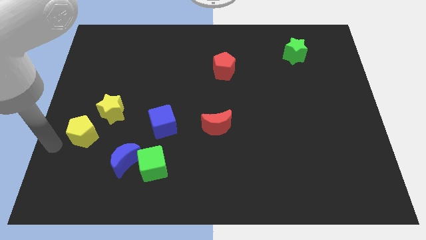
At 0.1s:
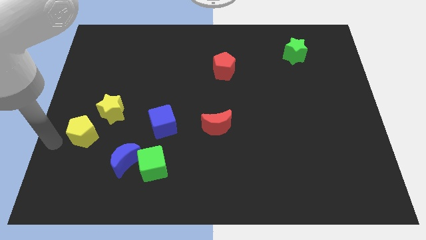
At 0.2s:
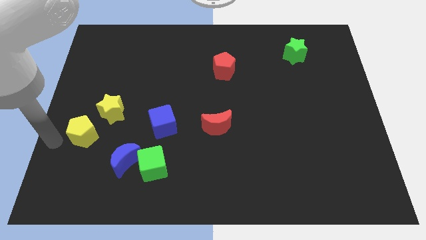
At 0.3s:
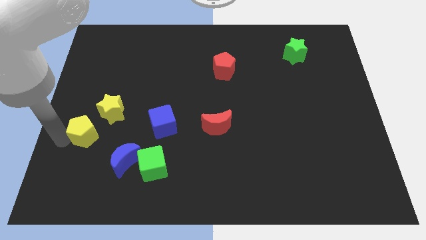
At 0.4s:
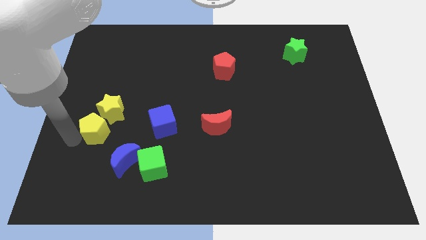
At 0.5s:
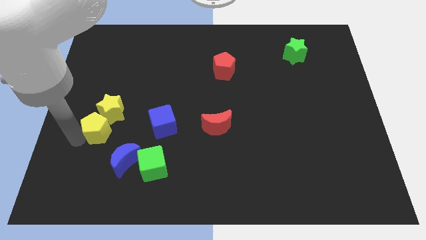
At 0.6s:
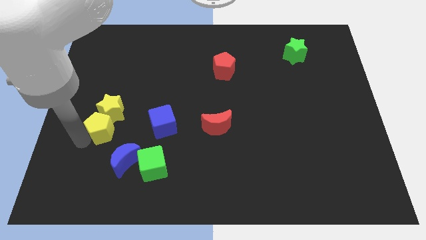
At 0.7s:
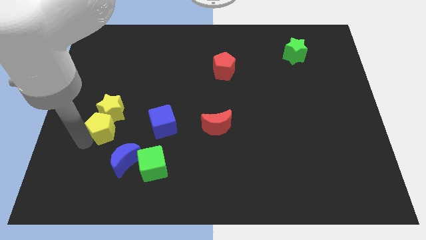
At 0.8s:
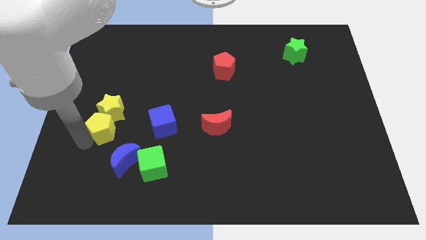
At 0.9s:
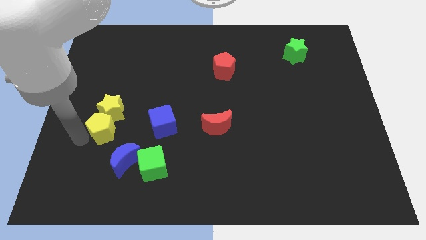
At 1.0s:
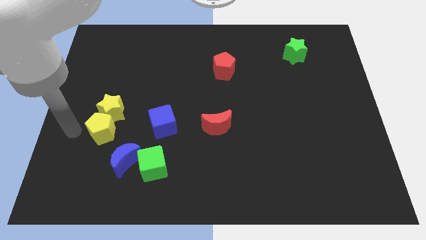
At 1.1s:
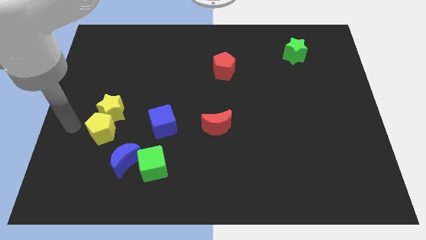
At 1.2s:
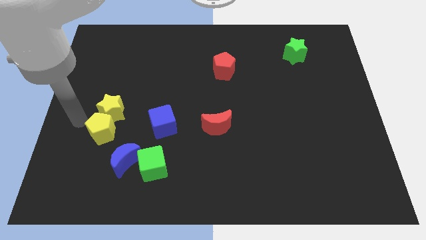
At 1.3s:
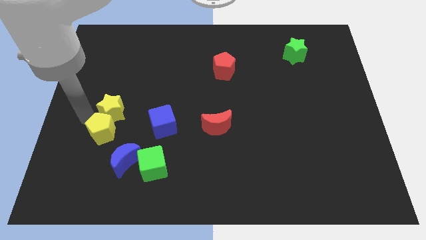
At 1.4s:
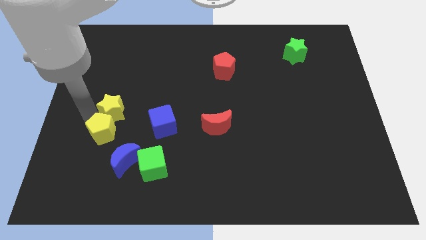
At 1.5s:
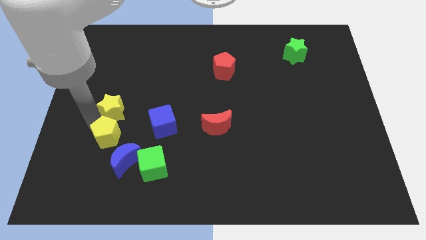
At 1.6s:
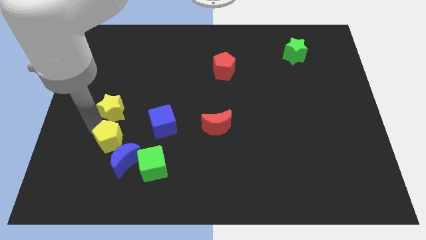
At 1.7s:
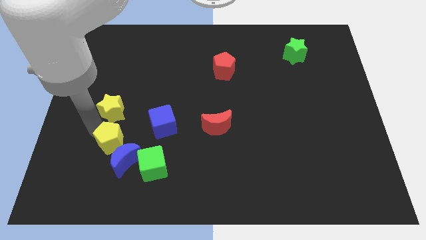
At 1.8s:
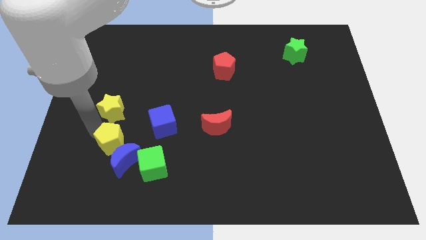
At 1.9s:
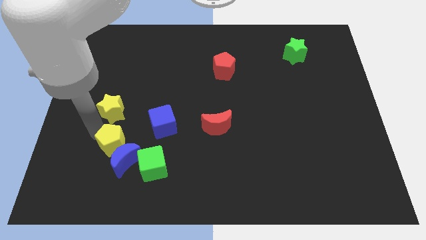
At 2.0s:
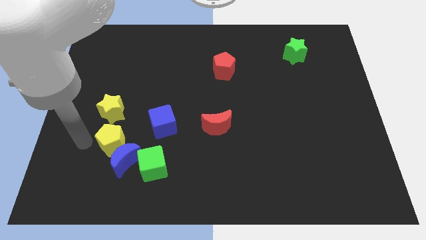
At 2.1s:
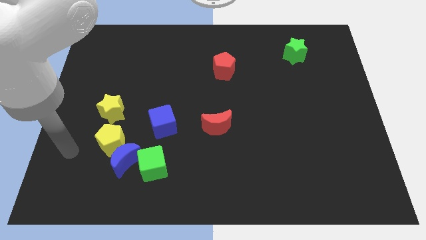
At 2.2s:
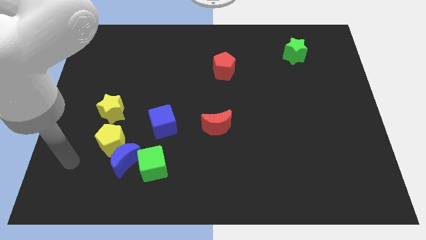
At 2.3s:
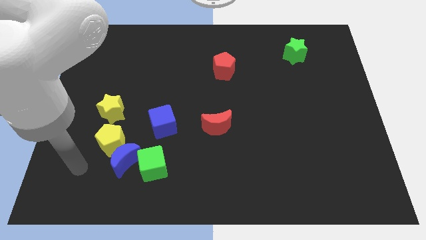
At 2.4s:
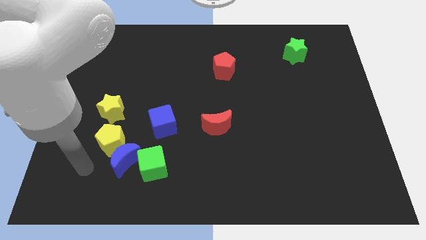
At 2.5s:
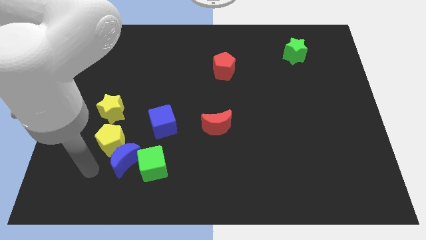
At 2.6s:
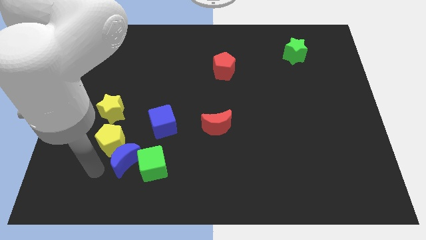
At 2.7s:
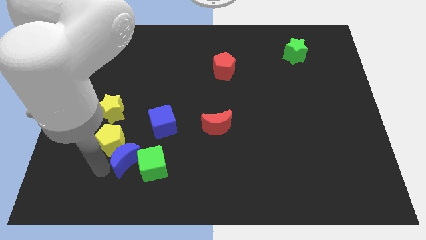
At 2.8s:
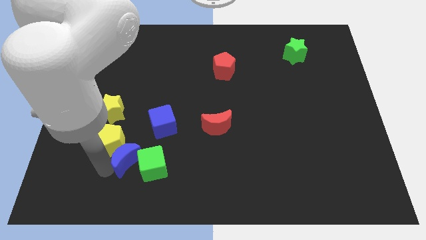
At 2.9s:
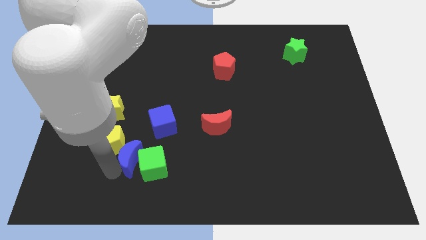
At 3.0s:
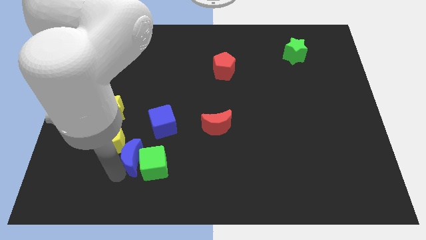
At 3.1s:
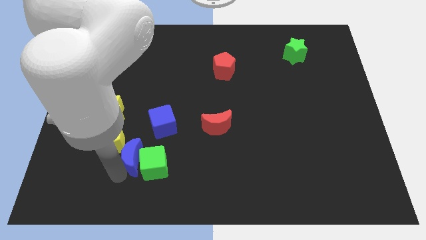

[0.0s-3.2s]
push green star into blue moon move blue moon left to the green square

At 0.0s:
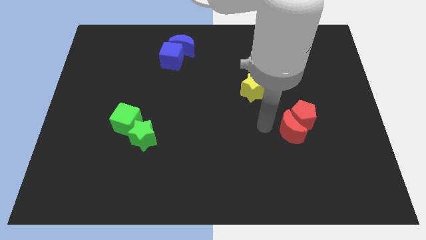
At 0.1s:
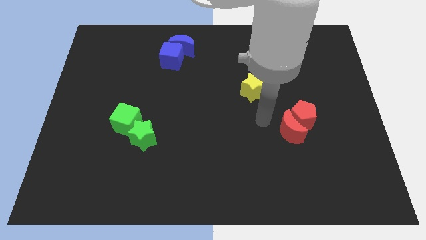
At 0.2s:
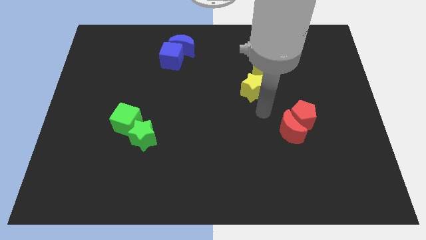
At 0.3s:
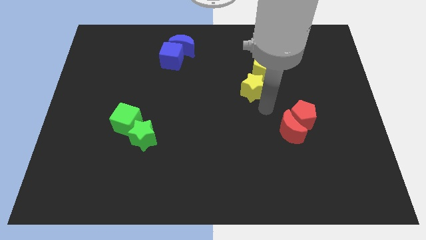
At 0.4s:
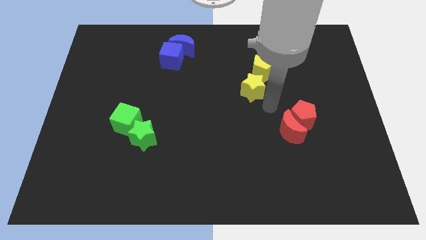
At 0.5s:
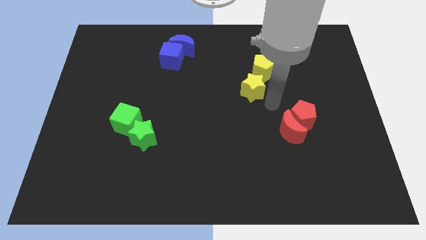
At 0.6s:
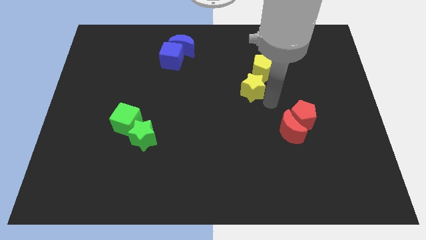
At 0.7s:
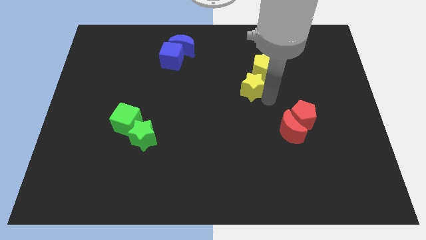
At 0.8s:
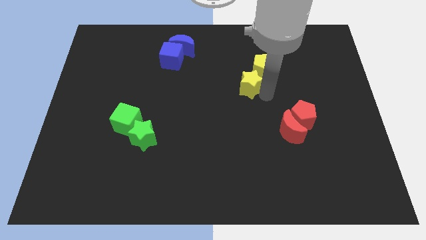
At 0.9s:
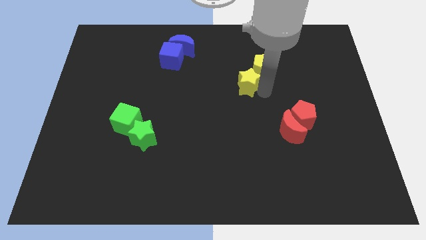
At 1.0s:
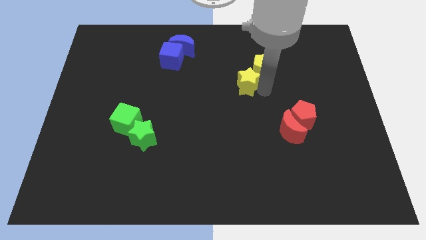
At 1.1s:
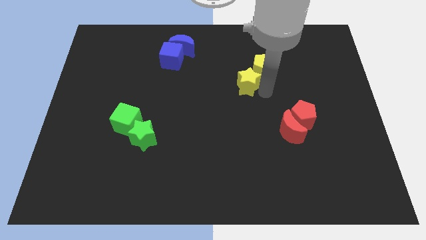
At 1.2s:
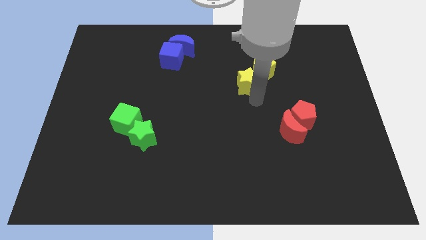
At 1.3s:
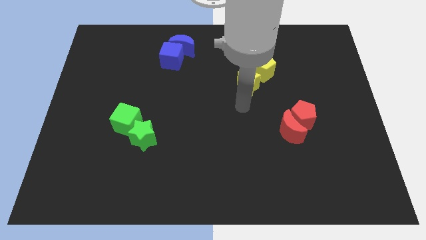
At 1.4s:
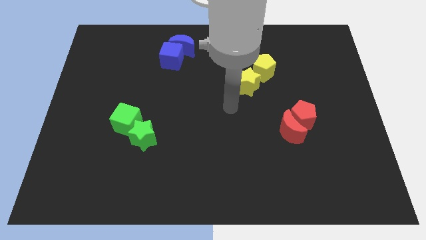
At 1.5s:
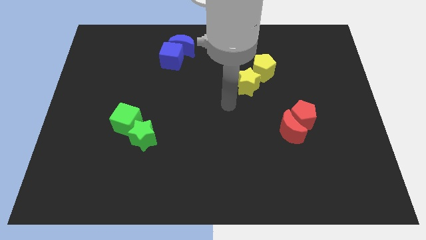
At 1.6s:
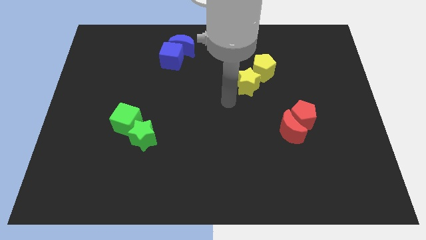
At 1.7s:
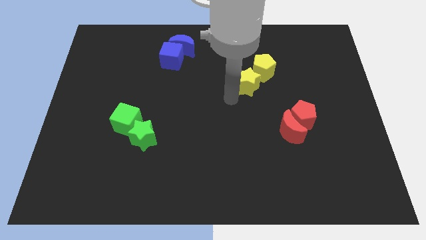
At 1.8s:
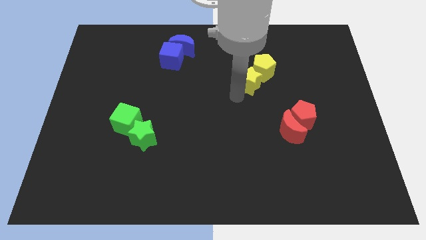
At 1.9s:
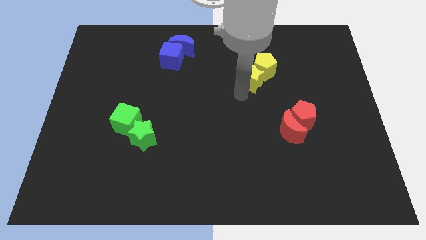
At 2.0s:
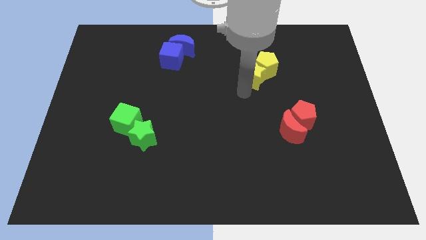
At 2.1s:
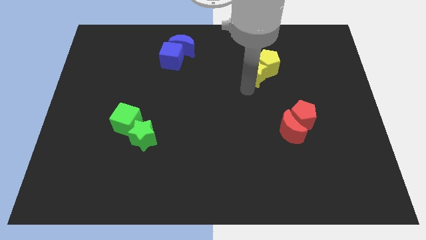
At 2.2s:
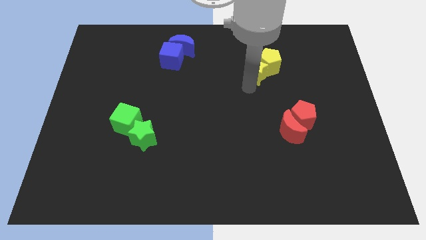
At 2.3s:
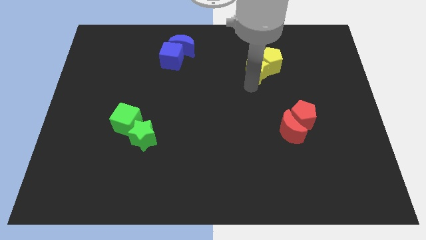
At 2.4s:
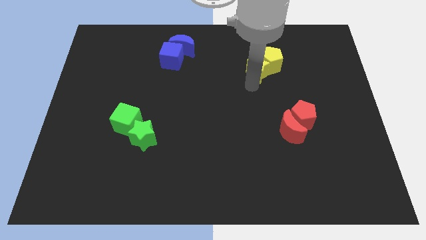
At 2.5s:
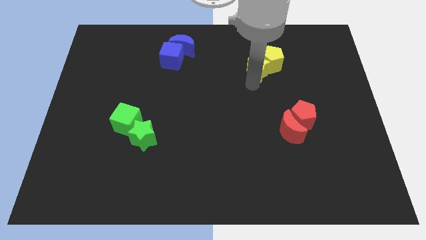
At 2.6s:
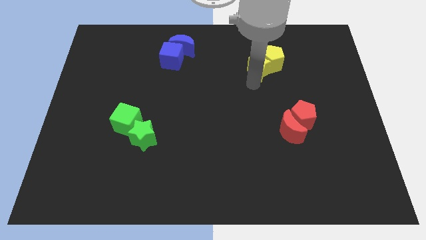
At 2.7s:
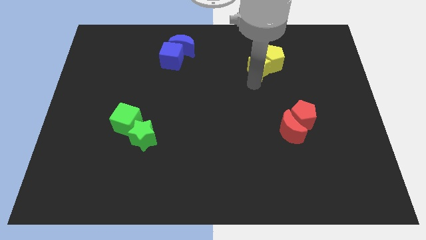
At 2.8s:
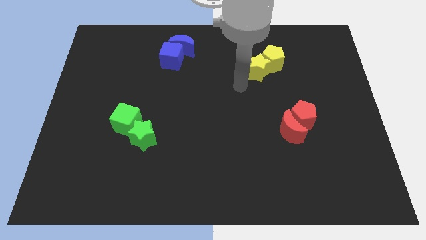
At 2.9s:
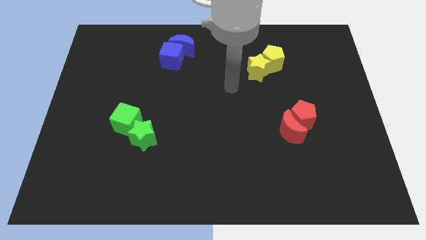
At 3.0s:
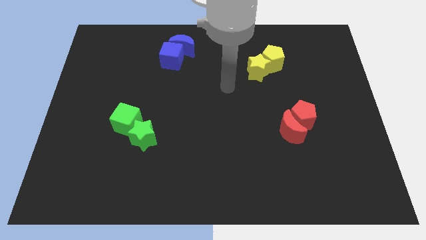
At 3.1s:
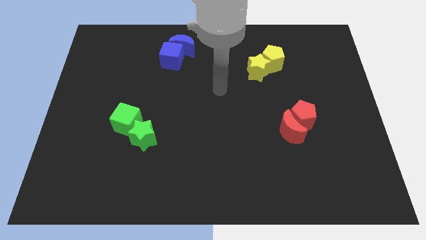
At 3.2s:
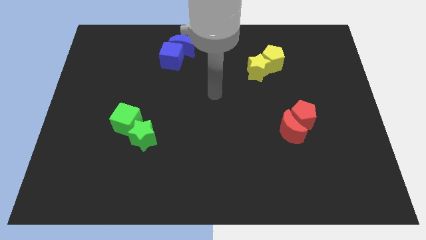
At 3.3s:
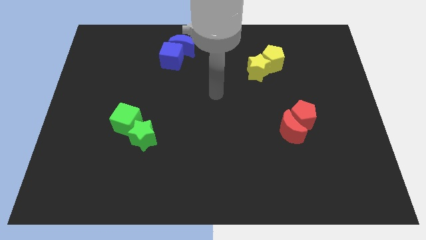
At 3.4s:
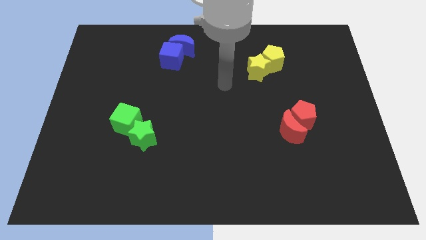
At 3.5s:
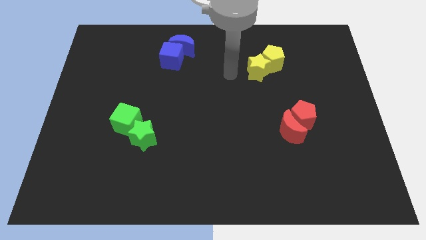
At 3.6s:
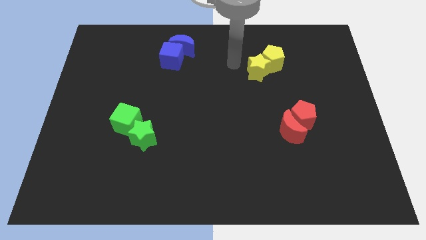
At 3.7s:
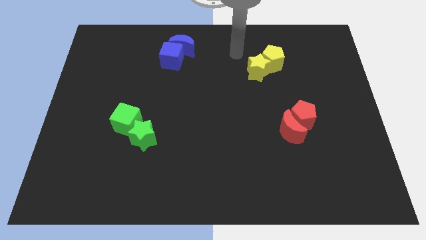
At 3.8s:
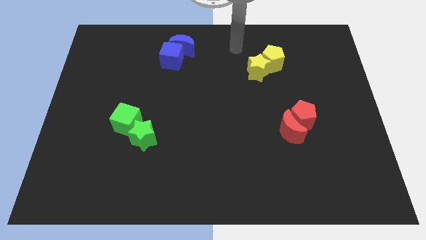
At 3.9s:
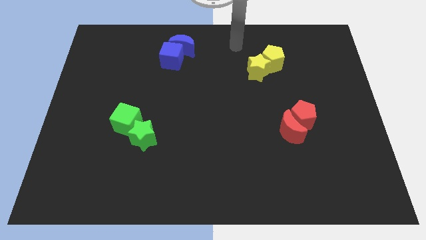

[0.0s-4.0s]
move the yellow star into the yellow pentagon

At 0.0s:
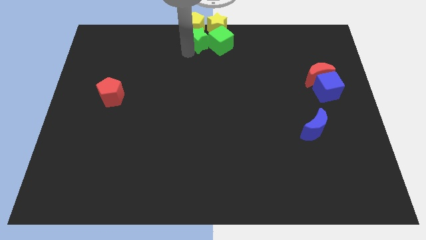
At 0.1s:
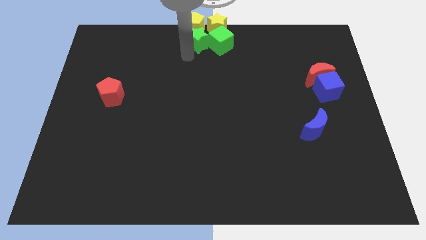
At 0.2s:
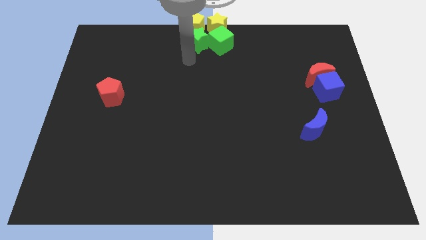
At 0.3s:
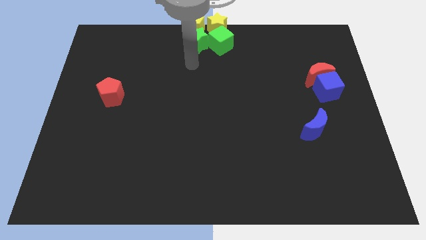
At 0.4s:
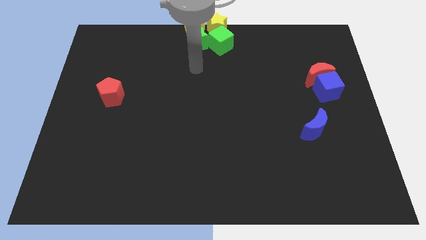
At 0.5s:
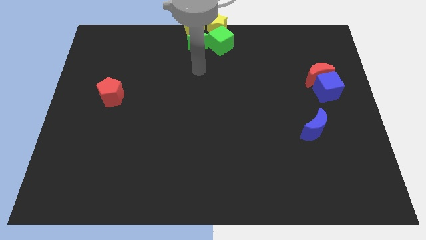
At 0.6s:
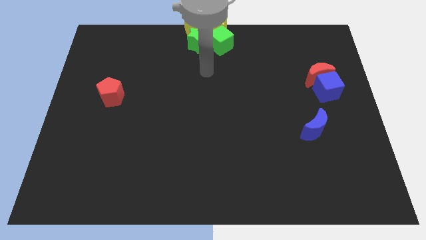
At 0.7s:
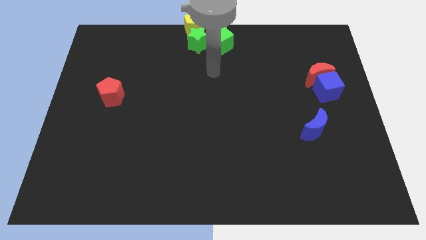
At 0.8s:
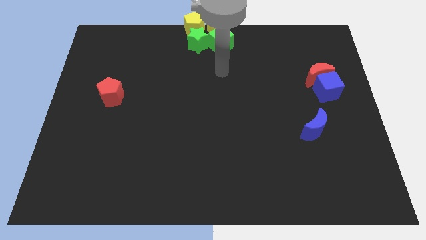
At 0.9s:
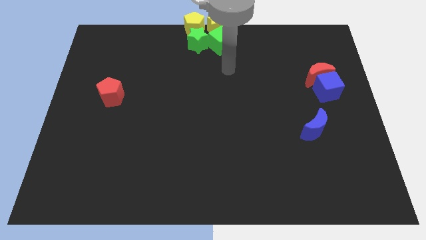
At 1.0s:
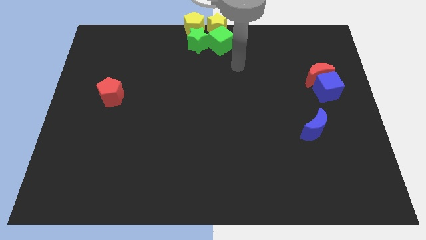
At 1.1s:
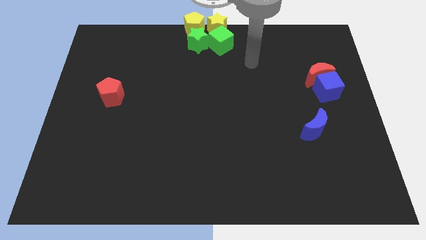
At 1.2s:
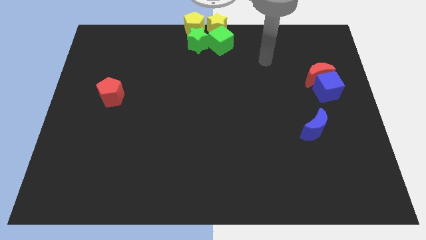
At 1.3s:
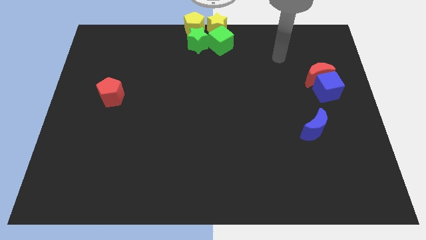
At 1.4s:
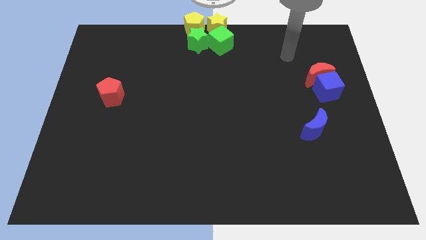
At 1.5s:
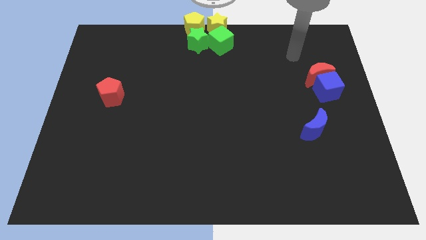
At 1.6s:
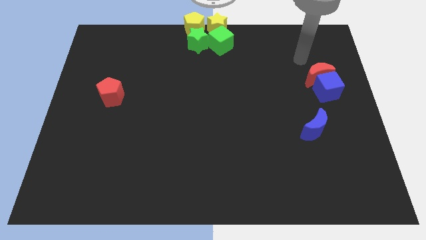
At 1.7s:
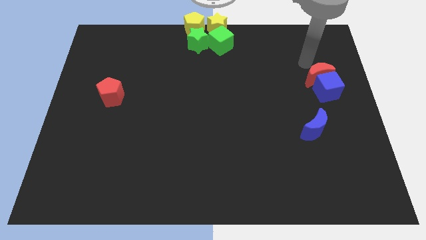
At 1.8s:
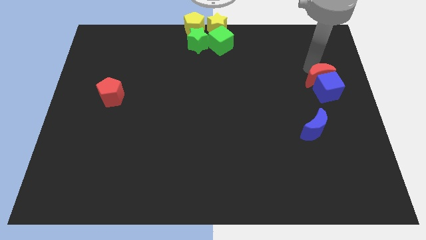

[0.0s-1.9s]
place your arm to the top of red crescent
